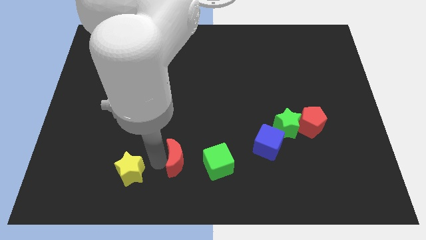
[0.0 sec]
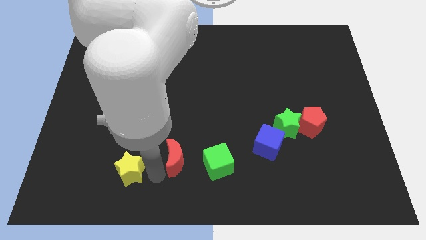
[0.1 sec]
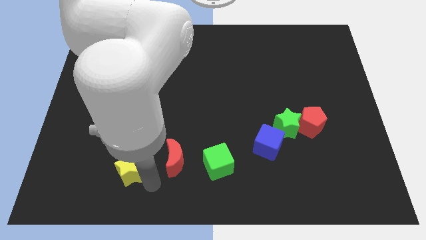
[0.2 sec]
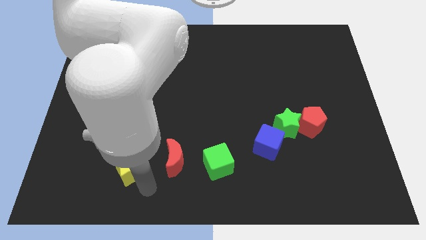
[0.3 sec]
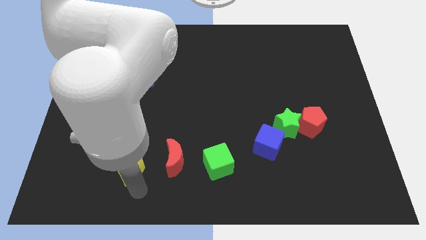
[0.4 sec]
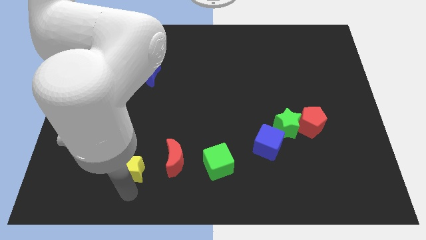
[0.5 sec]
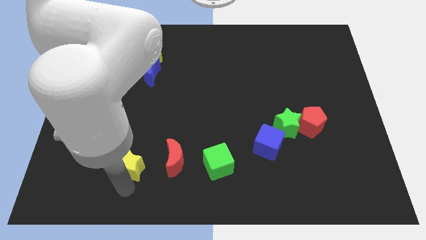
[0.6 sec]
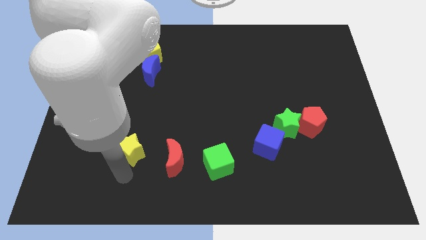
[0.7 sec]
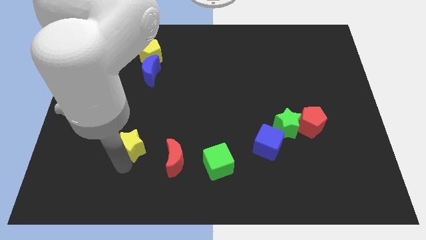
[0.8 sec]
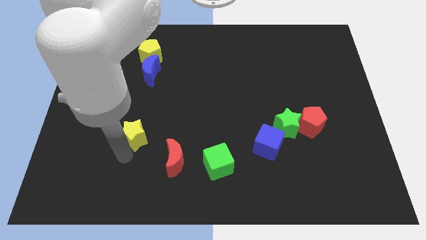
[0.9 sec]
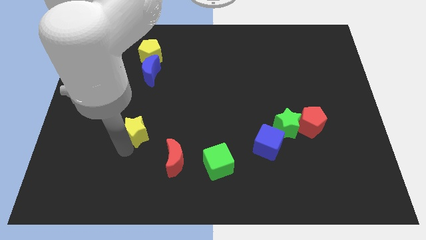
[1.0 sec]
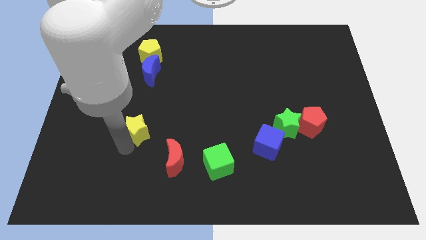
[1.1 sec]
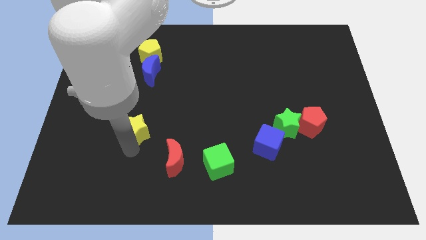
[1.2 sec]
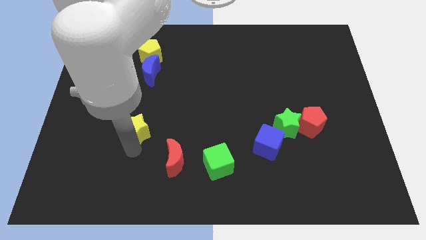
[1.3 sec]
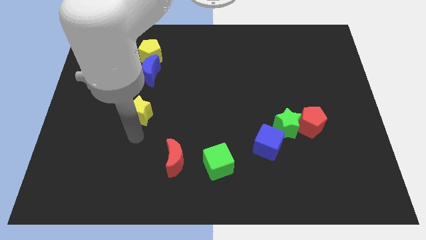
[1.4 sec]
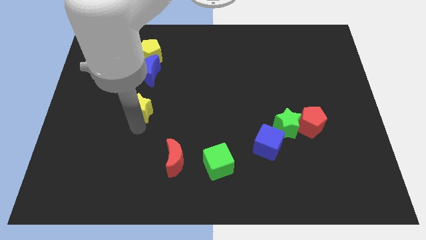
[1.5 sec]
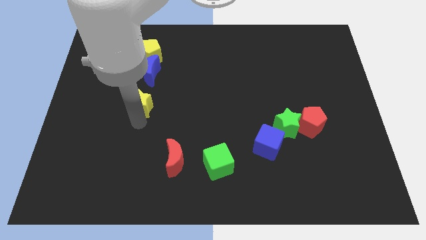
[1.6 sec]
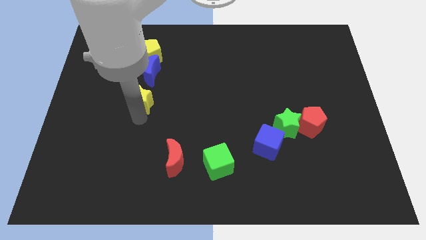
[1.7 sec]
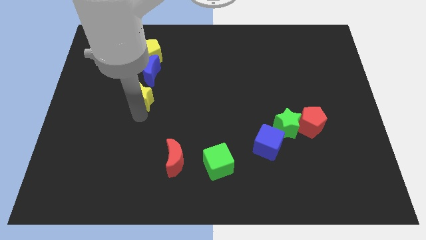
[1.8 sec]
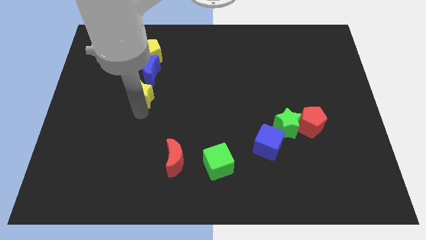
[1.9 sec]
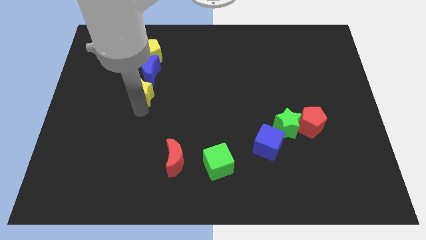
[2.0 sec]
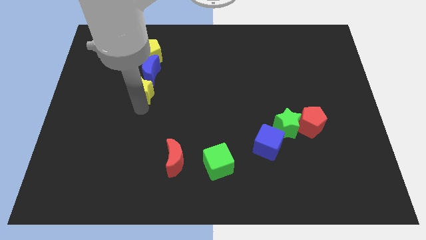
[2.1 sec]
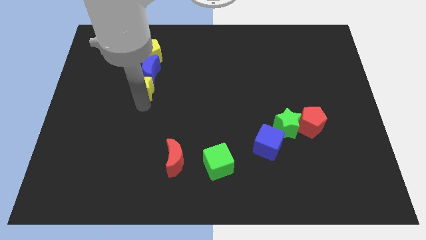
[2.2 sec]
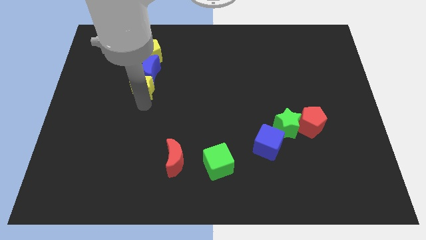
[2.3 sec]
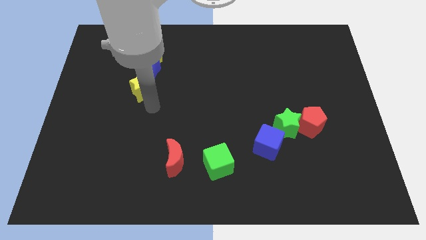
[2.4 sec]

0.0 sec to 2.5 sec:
move the yellow star to the bottom of the blue crescent

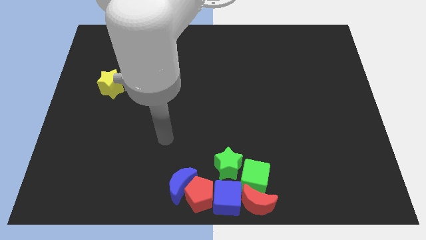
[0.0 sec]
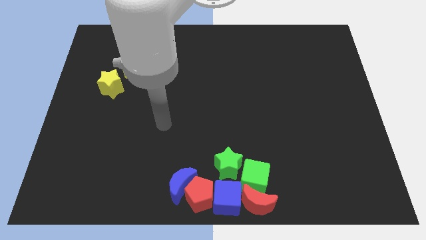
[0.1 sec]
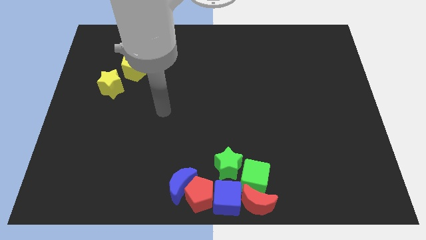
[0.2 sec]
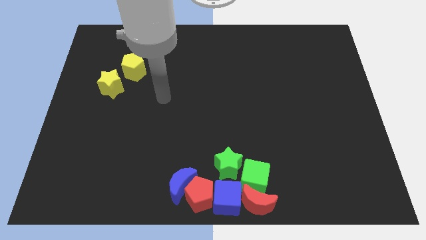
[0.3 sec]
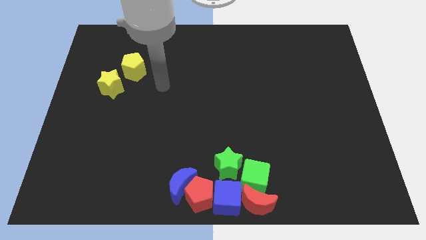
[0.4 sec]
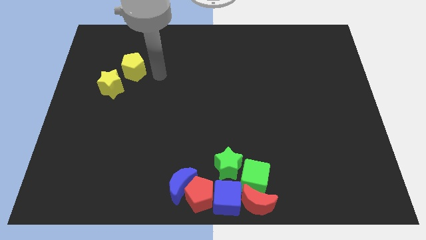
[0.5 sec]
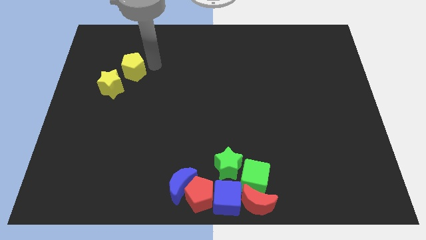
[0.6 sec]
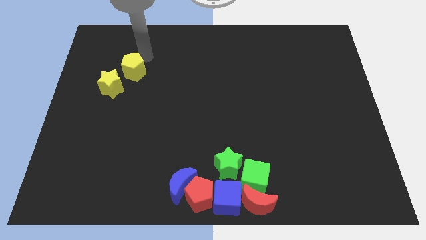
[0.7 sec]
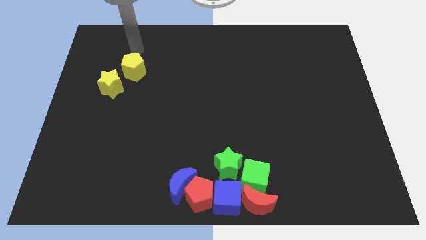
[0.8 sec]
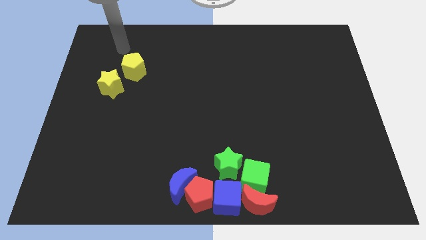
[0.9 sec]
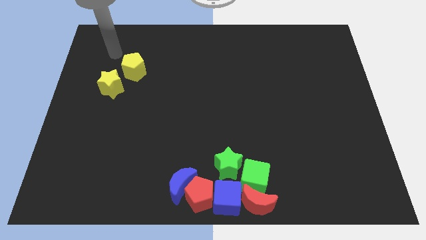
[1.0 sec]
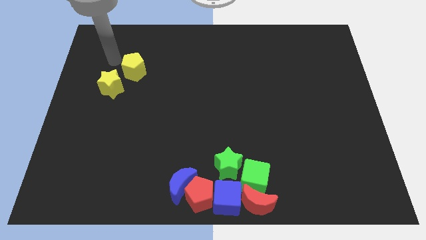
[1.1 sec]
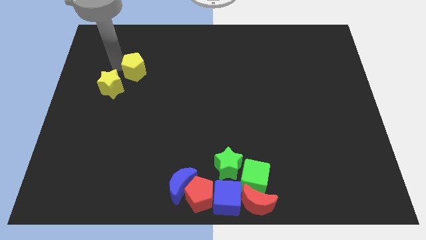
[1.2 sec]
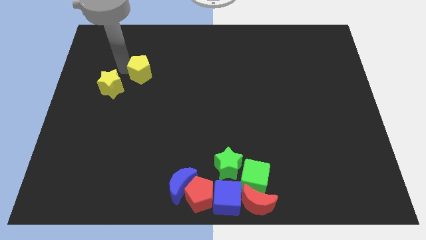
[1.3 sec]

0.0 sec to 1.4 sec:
point your arm to the left of the yellow pentagon

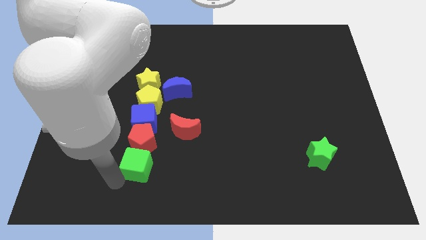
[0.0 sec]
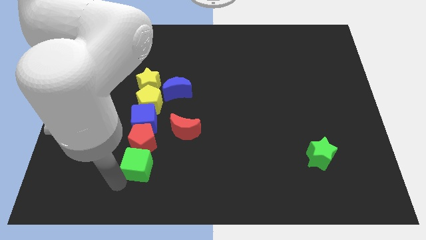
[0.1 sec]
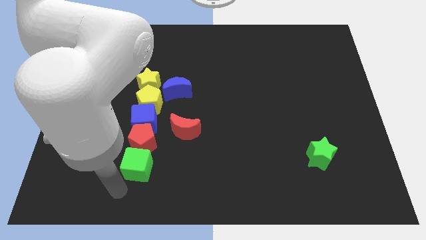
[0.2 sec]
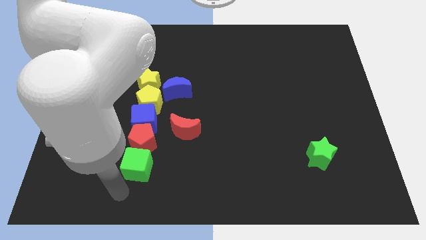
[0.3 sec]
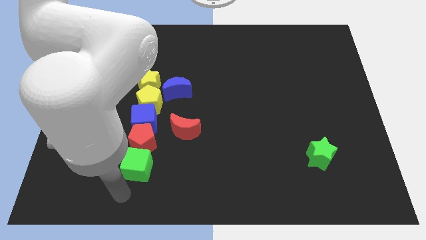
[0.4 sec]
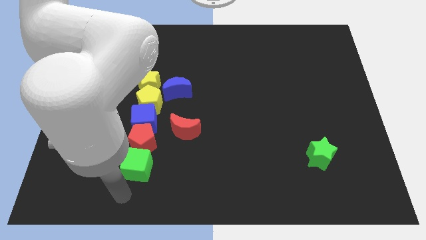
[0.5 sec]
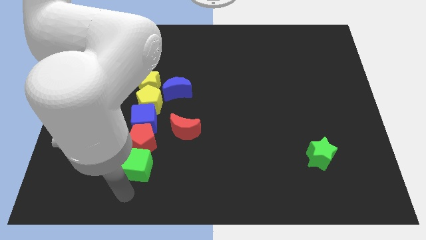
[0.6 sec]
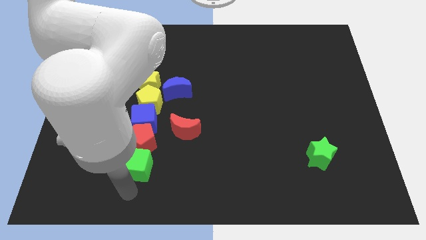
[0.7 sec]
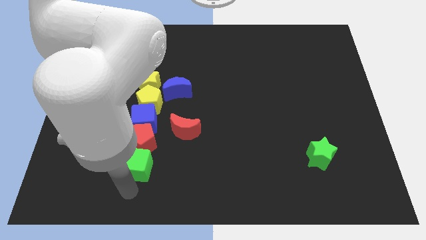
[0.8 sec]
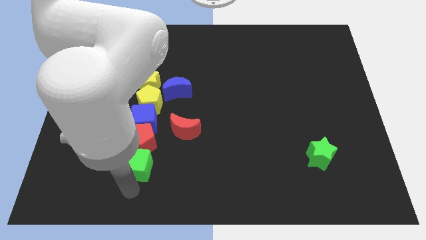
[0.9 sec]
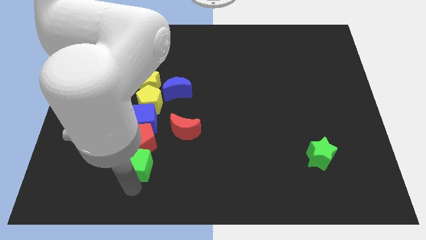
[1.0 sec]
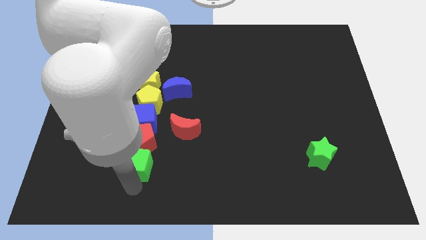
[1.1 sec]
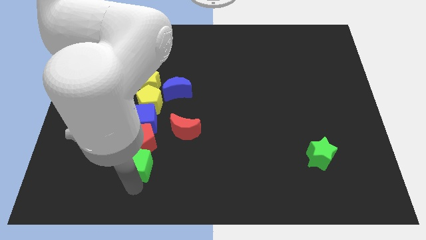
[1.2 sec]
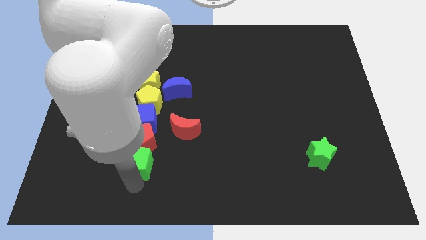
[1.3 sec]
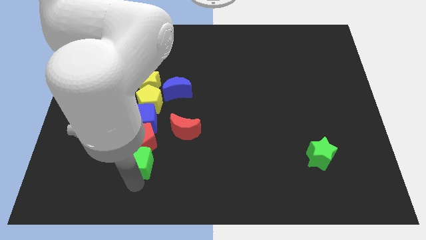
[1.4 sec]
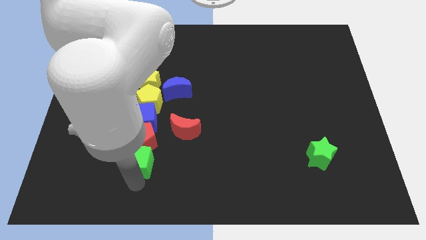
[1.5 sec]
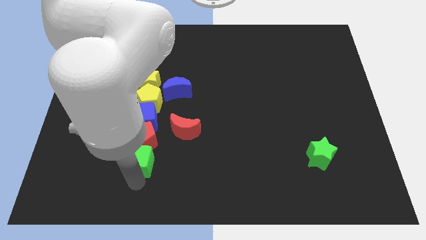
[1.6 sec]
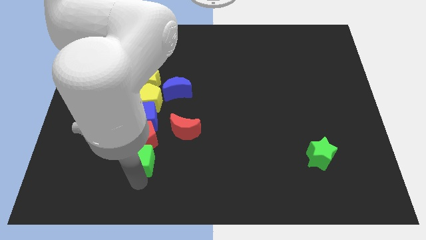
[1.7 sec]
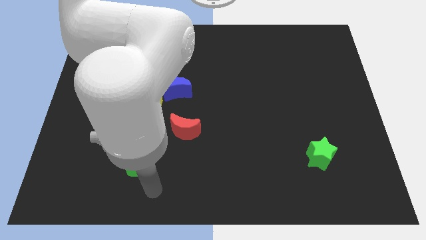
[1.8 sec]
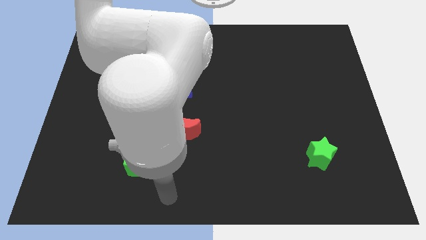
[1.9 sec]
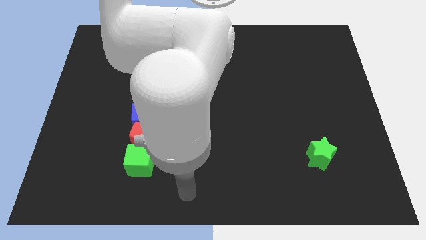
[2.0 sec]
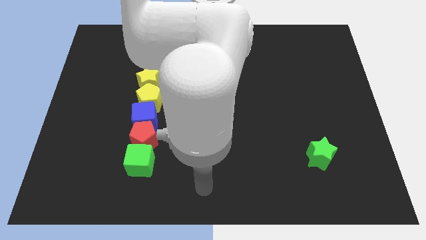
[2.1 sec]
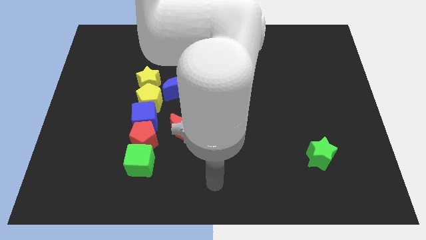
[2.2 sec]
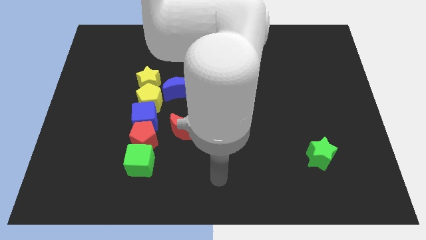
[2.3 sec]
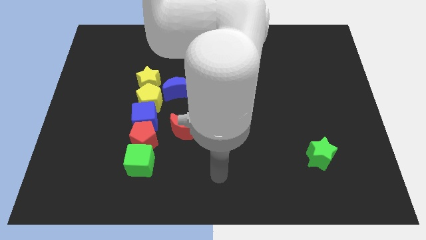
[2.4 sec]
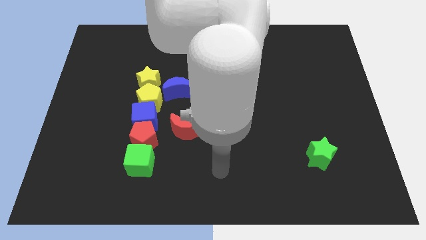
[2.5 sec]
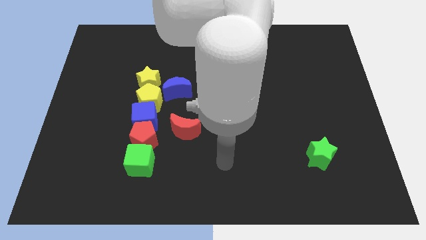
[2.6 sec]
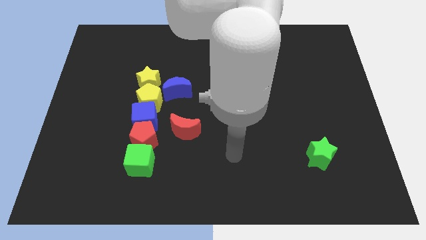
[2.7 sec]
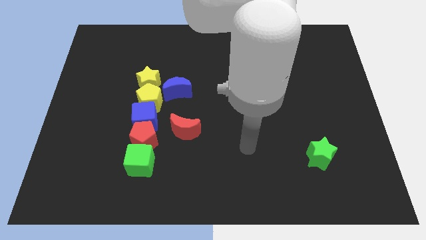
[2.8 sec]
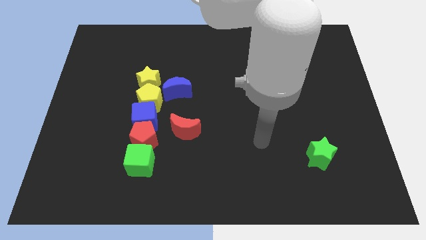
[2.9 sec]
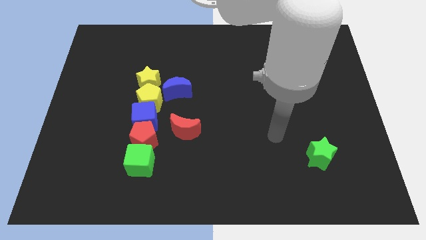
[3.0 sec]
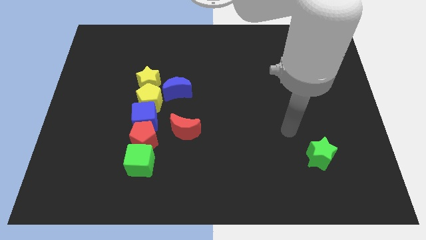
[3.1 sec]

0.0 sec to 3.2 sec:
slightly move the vertical line of blocks towards top

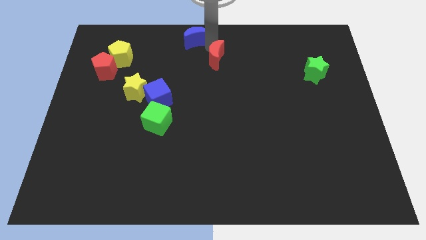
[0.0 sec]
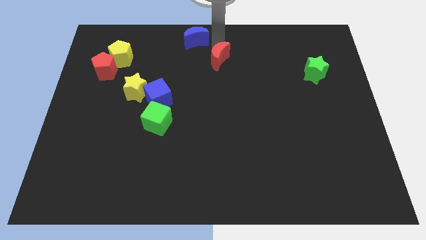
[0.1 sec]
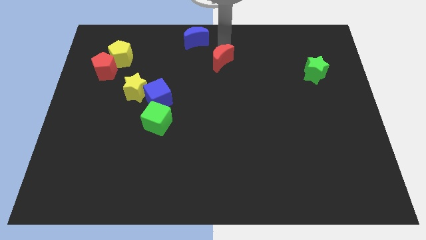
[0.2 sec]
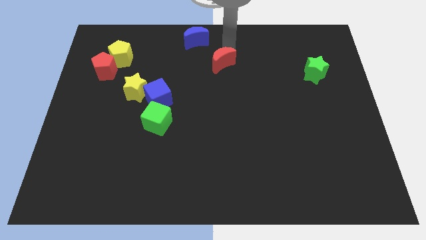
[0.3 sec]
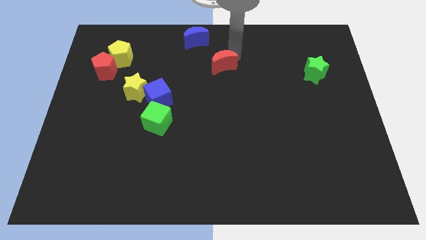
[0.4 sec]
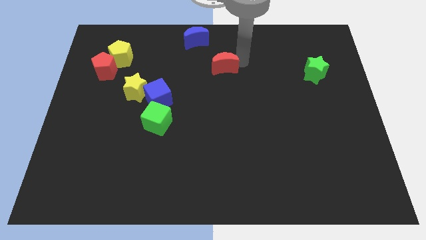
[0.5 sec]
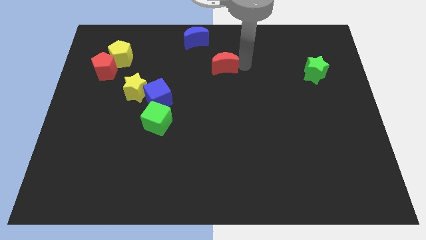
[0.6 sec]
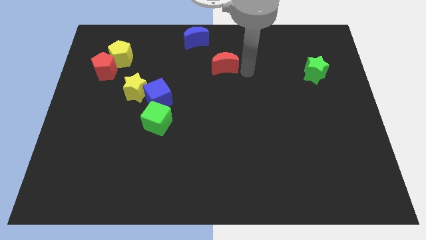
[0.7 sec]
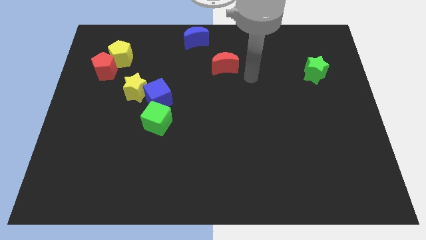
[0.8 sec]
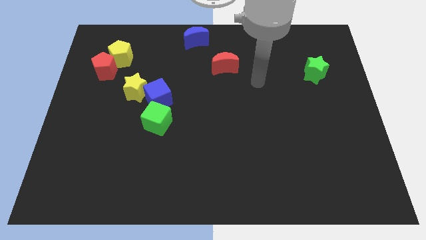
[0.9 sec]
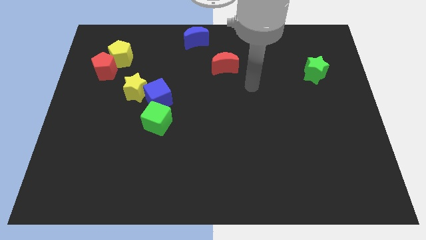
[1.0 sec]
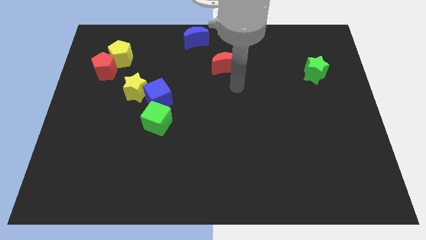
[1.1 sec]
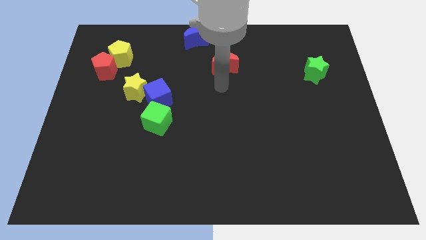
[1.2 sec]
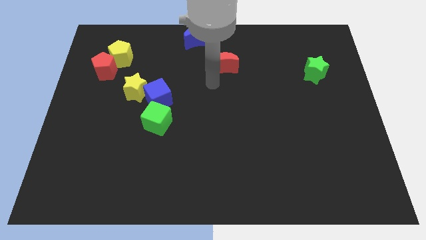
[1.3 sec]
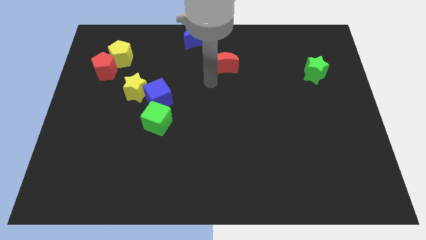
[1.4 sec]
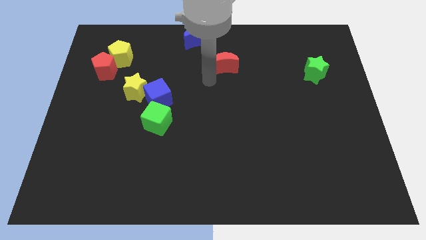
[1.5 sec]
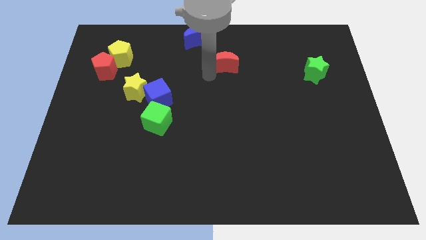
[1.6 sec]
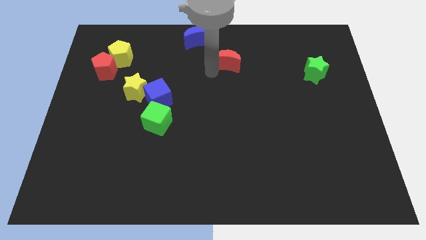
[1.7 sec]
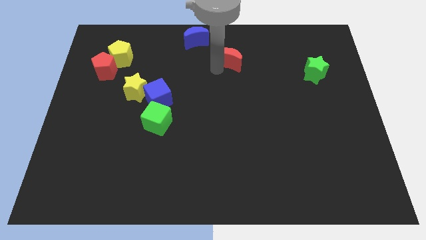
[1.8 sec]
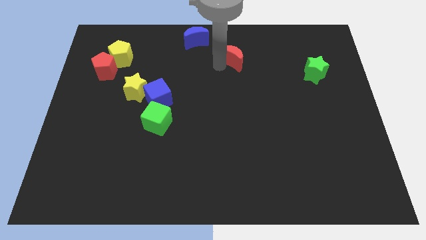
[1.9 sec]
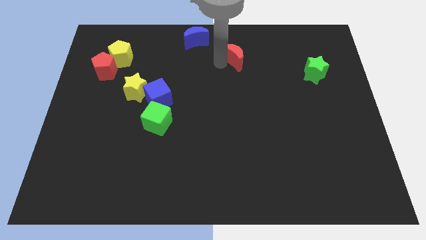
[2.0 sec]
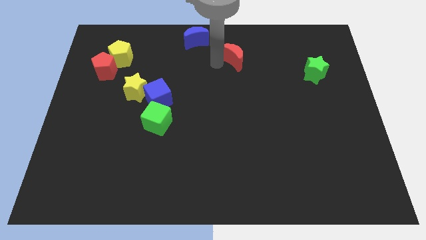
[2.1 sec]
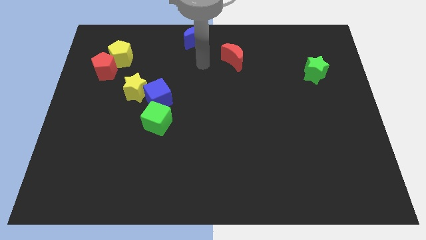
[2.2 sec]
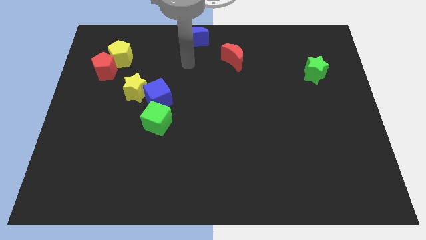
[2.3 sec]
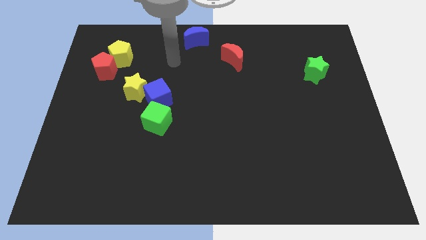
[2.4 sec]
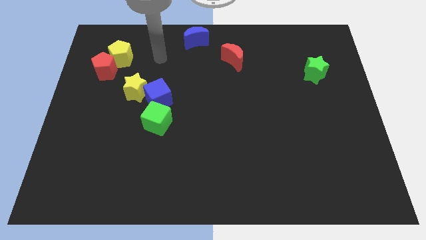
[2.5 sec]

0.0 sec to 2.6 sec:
push the red crescent towards right
